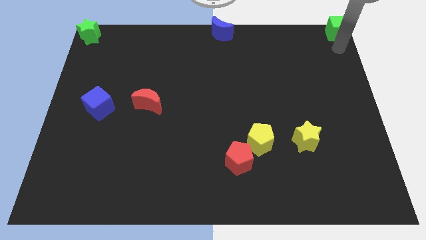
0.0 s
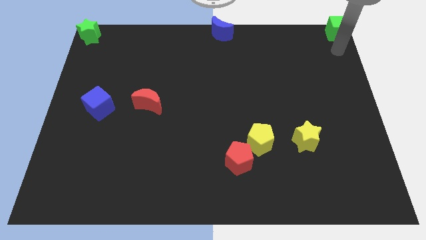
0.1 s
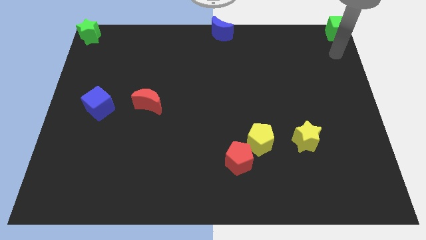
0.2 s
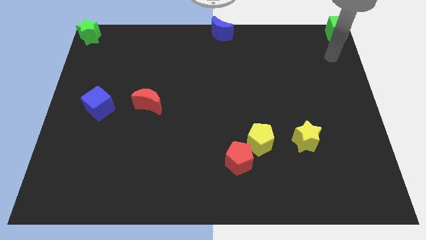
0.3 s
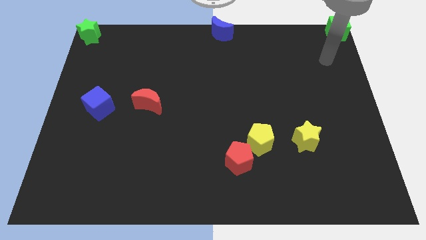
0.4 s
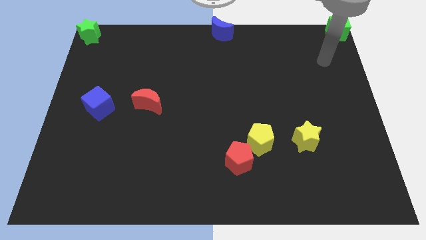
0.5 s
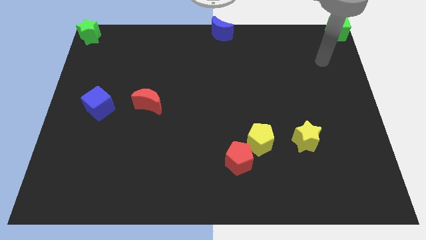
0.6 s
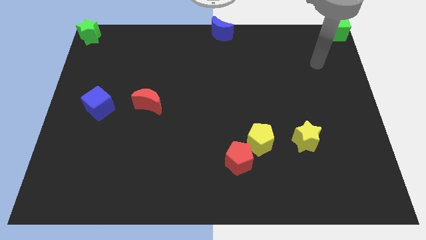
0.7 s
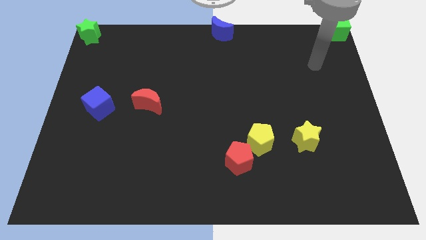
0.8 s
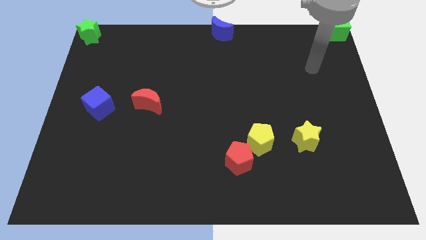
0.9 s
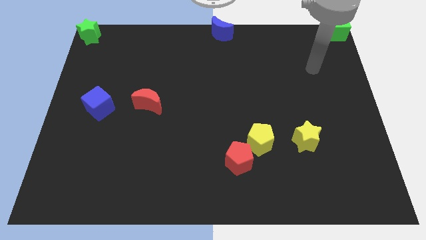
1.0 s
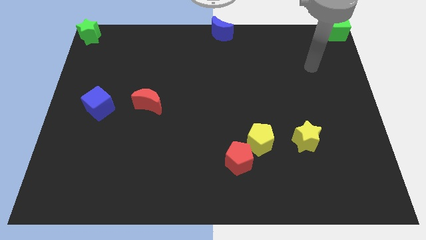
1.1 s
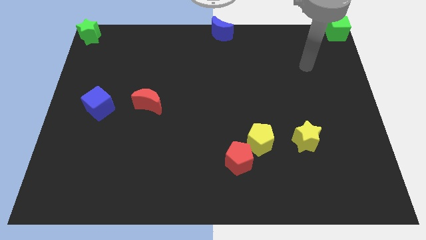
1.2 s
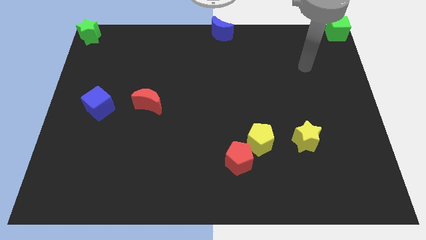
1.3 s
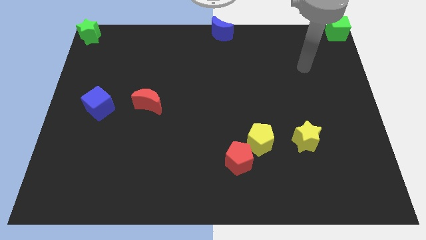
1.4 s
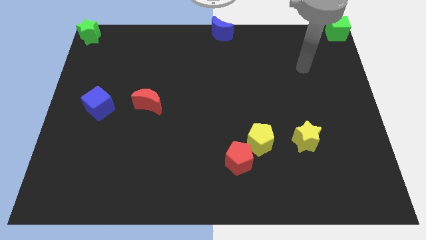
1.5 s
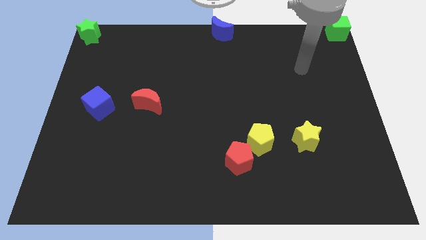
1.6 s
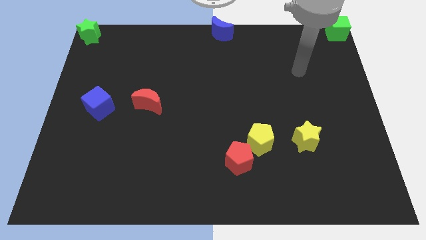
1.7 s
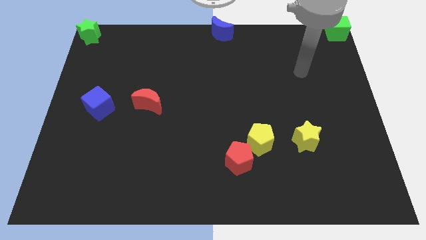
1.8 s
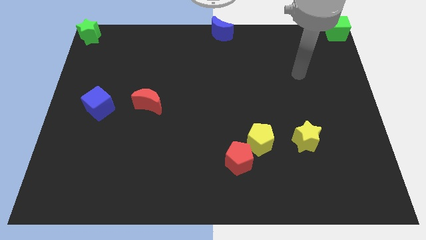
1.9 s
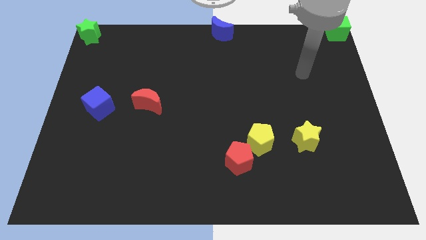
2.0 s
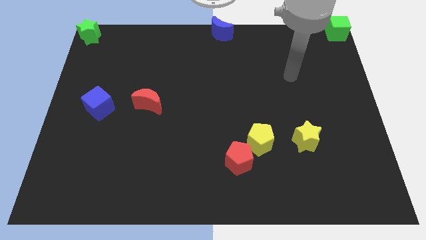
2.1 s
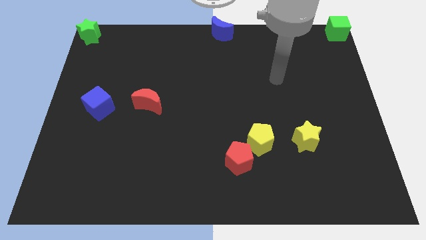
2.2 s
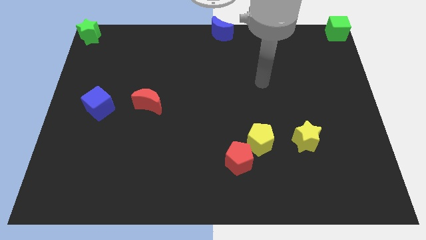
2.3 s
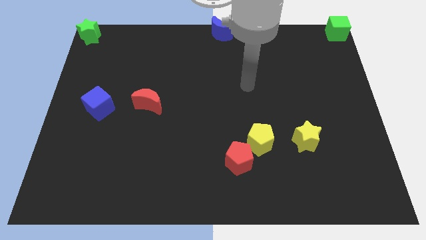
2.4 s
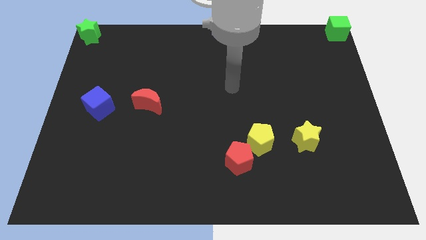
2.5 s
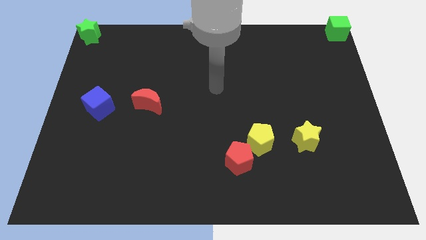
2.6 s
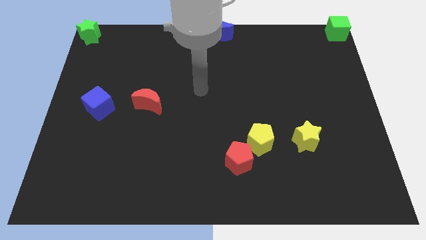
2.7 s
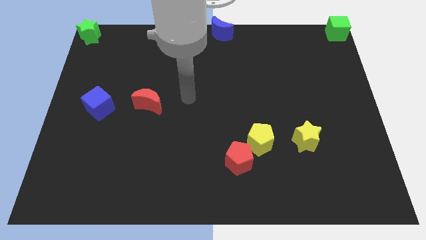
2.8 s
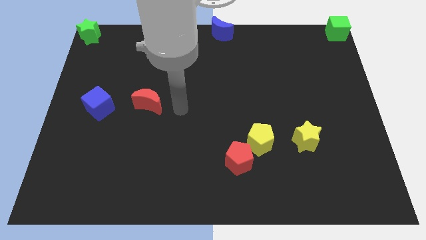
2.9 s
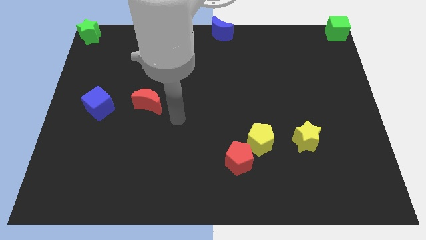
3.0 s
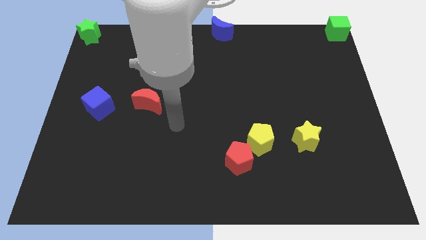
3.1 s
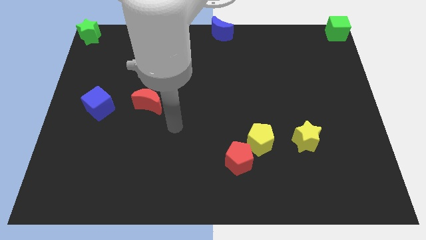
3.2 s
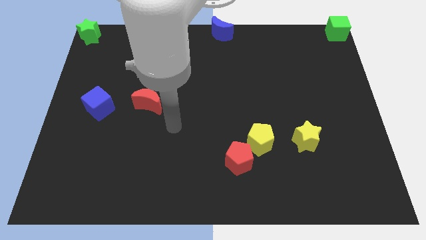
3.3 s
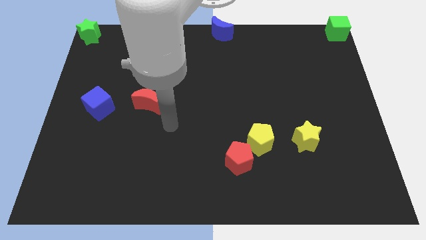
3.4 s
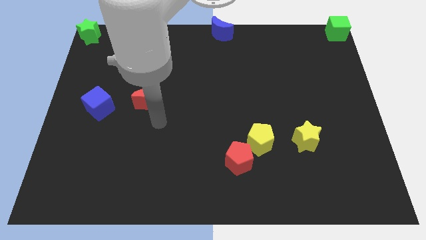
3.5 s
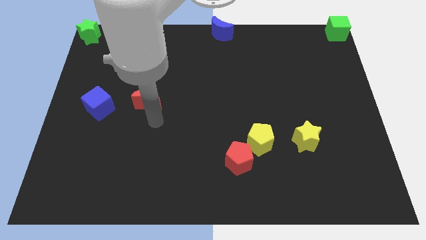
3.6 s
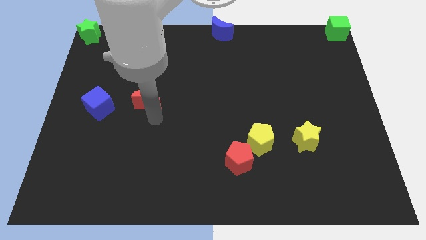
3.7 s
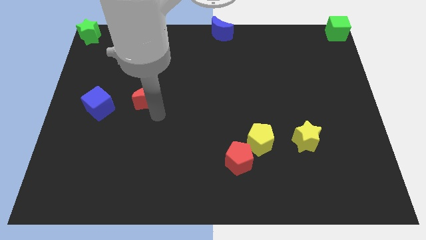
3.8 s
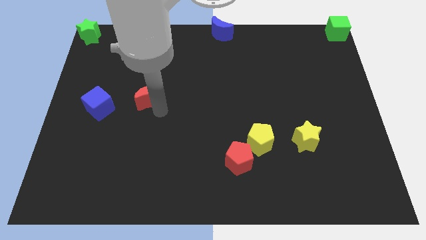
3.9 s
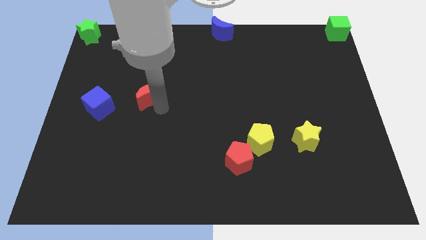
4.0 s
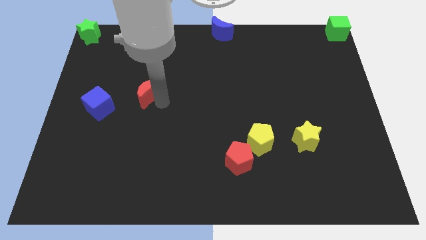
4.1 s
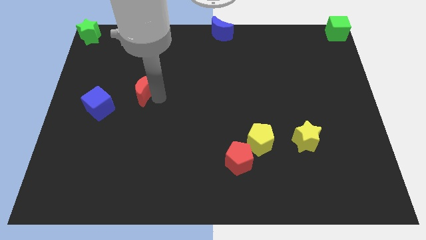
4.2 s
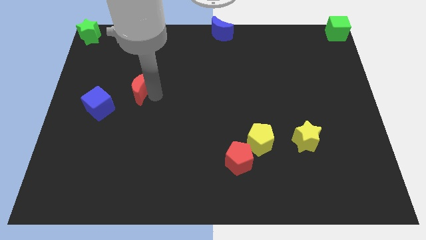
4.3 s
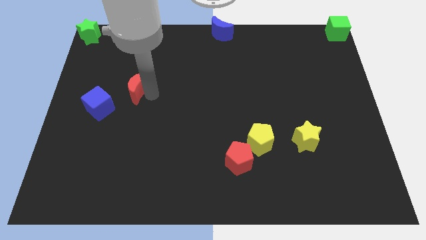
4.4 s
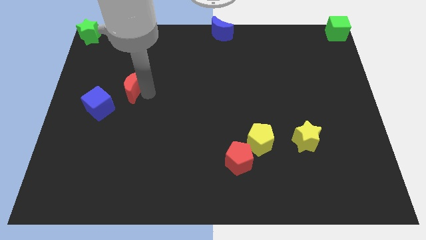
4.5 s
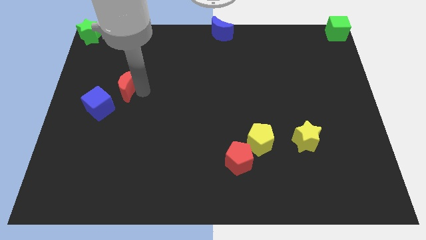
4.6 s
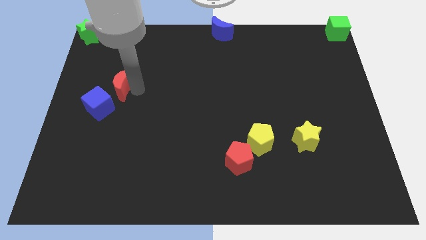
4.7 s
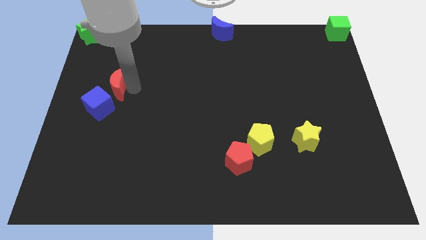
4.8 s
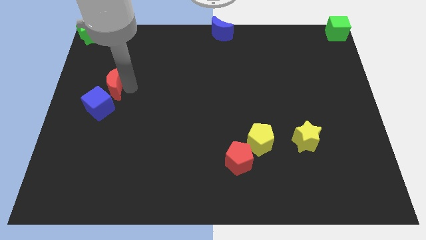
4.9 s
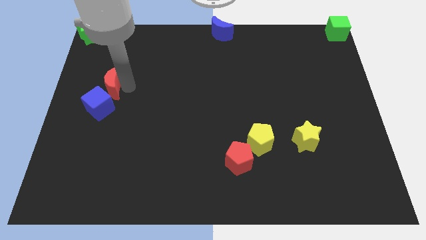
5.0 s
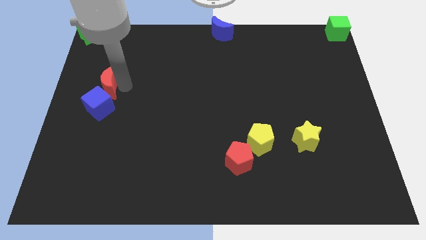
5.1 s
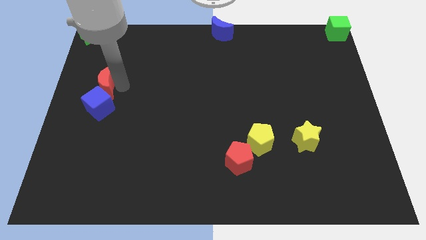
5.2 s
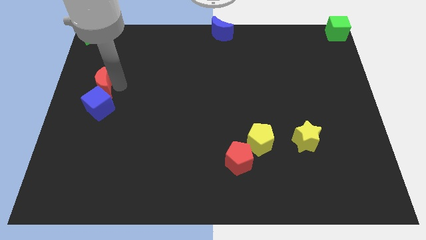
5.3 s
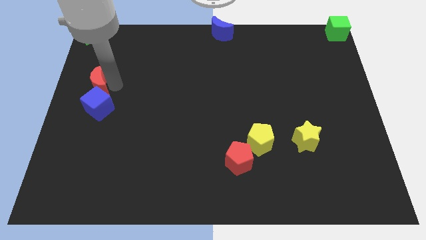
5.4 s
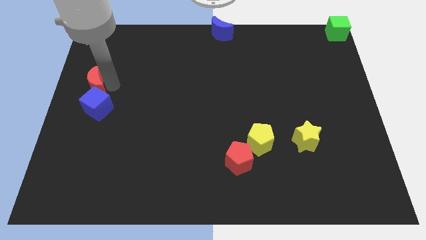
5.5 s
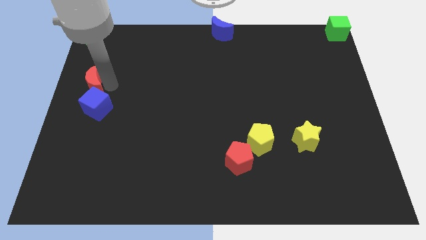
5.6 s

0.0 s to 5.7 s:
place the red moon at the top of blue cube

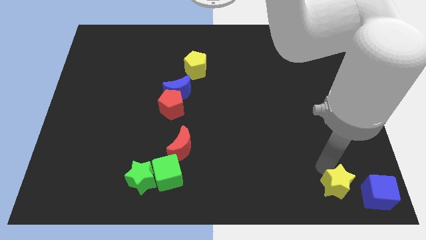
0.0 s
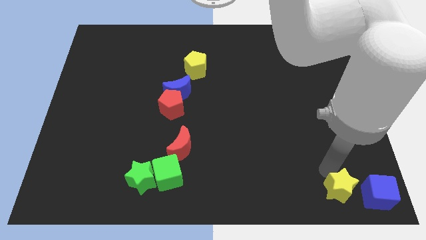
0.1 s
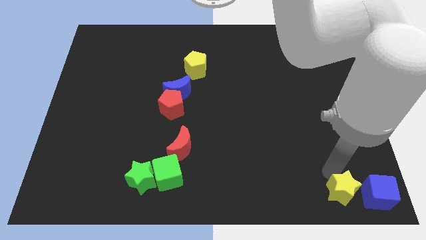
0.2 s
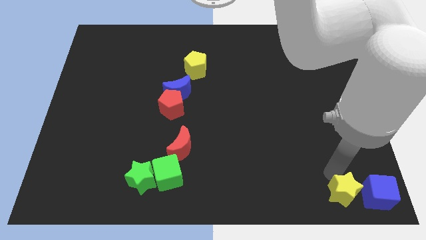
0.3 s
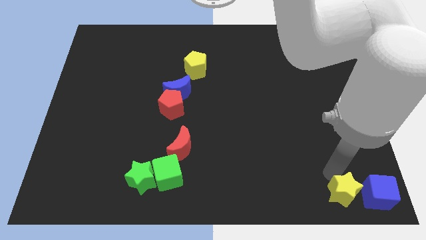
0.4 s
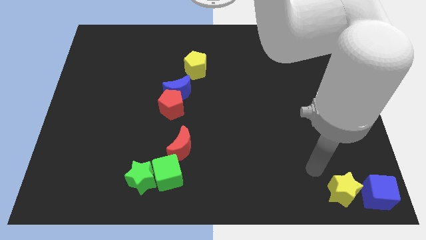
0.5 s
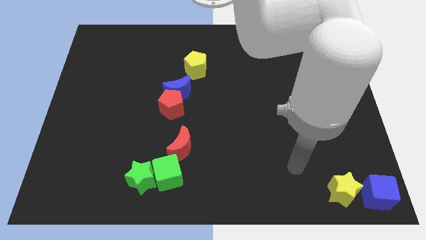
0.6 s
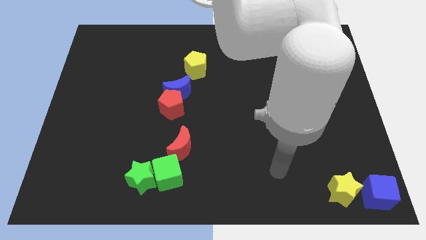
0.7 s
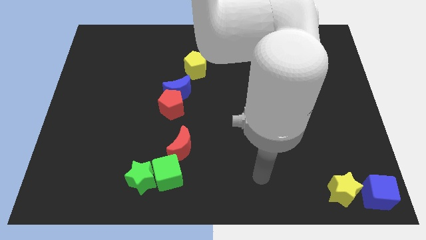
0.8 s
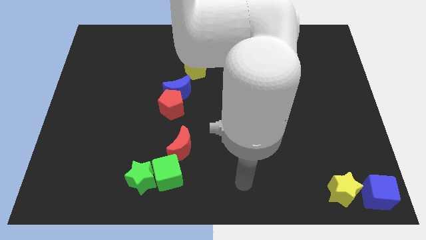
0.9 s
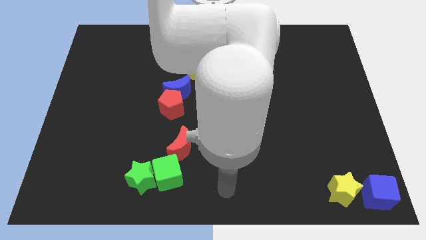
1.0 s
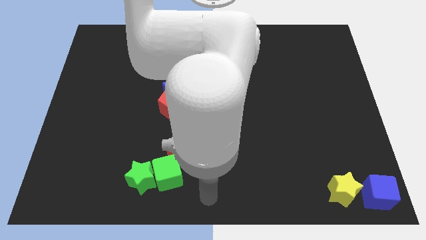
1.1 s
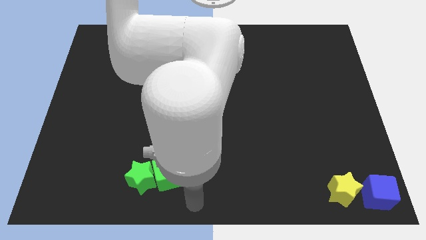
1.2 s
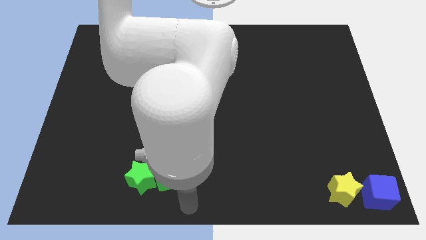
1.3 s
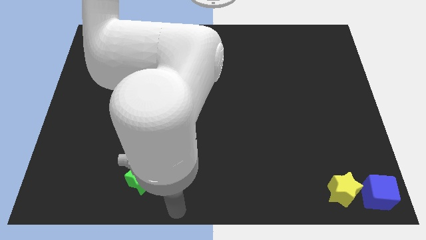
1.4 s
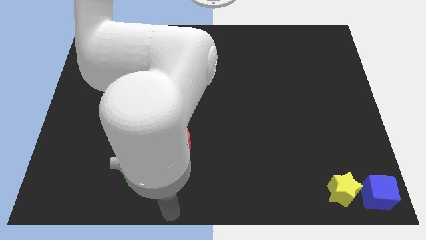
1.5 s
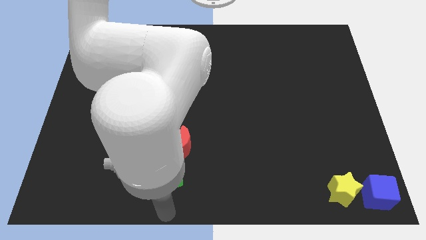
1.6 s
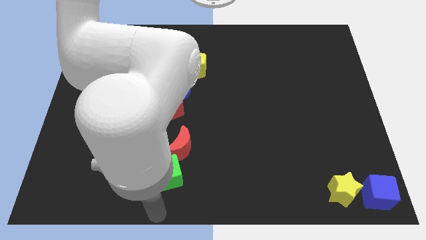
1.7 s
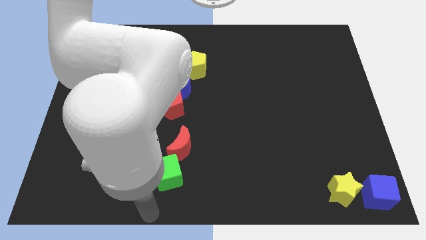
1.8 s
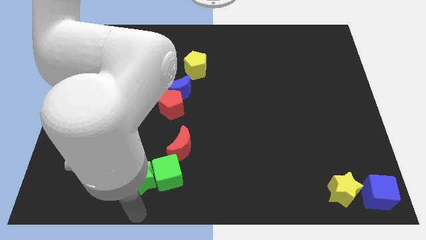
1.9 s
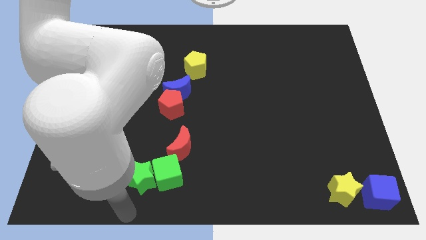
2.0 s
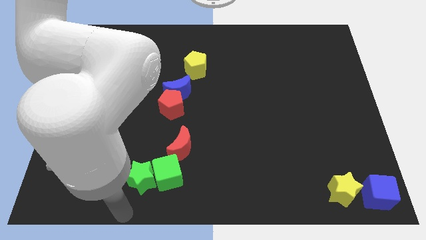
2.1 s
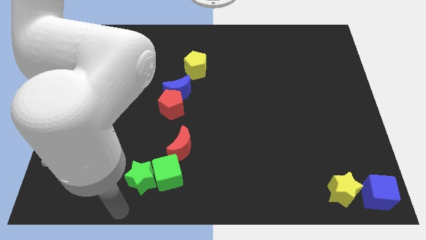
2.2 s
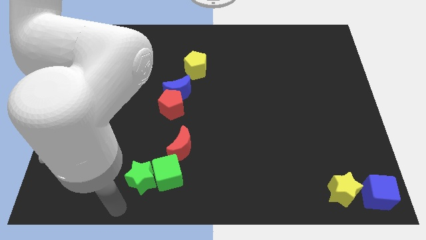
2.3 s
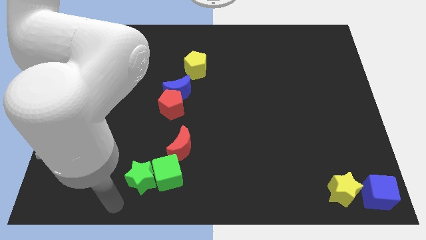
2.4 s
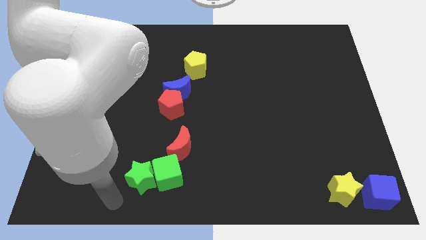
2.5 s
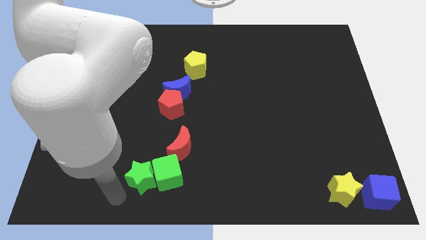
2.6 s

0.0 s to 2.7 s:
point the arm to the left of the green star

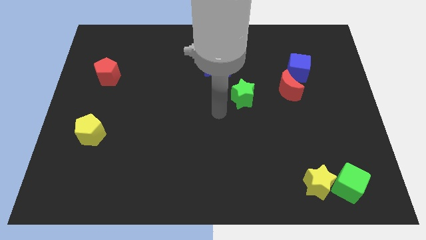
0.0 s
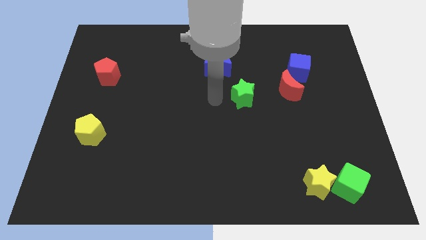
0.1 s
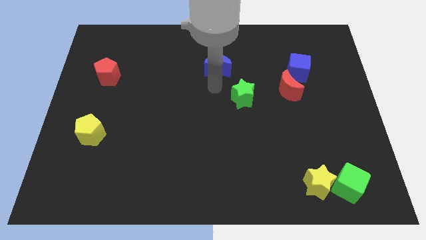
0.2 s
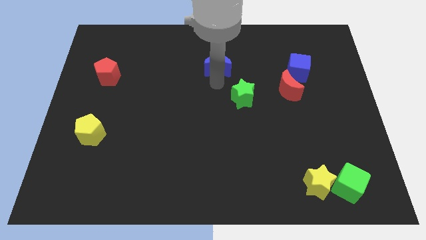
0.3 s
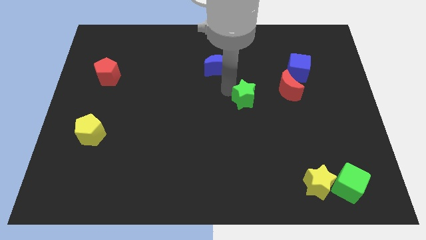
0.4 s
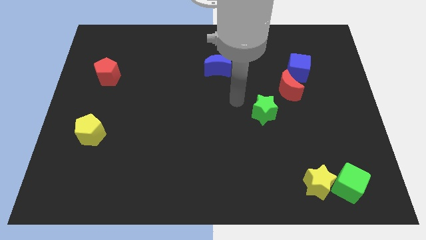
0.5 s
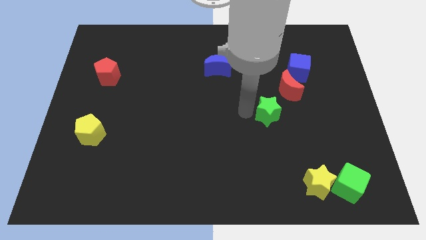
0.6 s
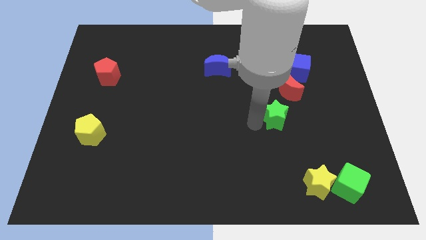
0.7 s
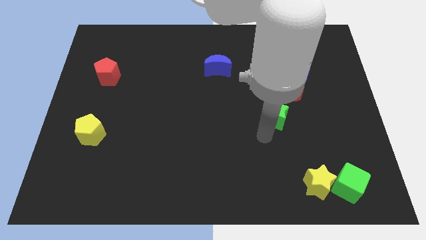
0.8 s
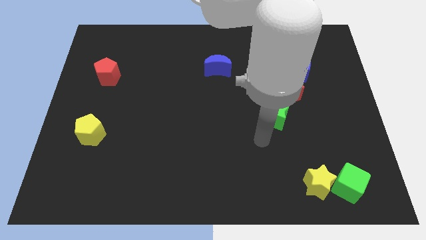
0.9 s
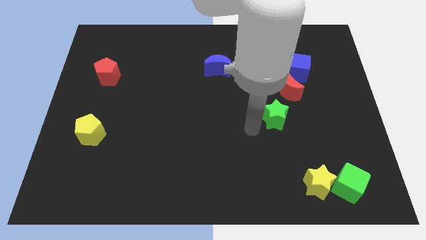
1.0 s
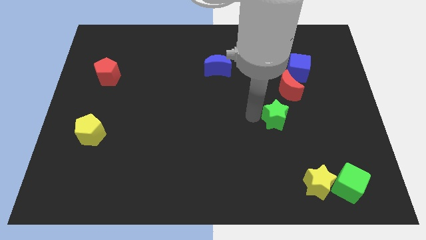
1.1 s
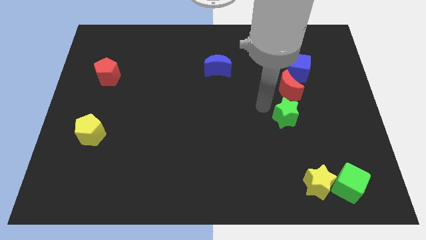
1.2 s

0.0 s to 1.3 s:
slide the green star to the bottom of the red moon
